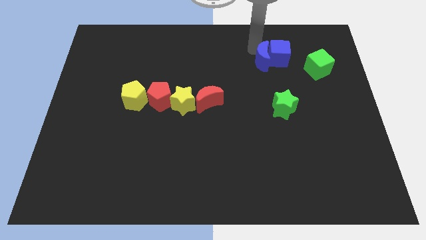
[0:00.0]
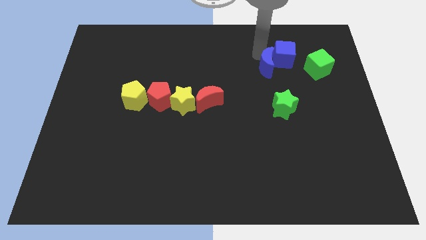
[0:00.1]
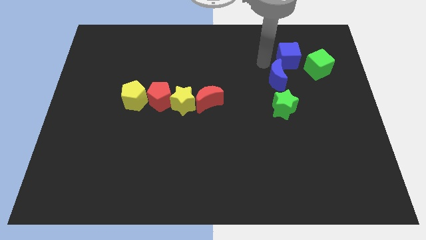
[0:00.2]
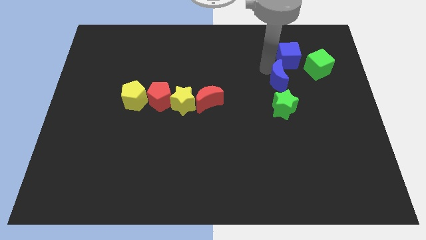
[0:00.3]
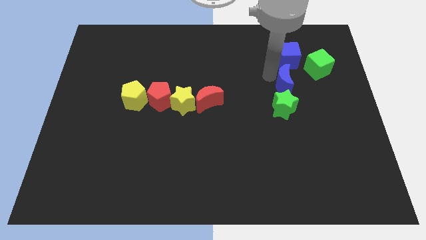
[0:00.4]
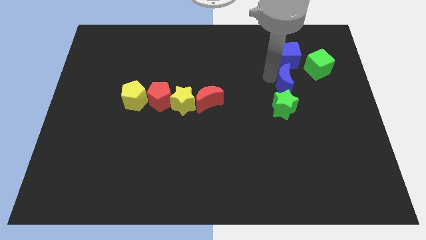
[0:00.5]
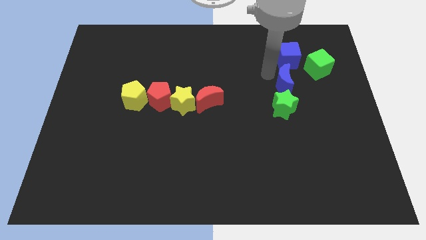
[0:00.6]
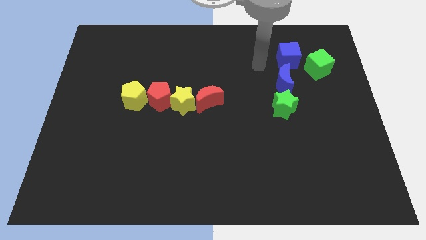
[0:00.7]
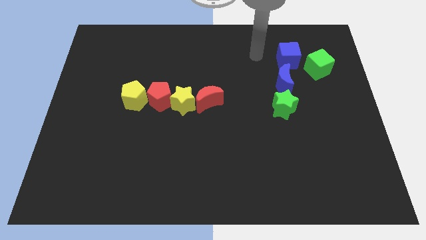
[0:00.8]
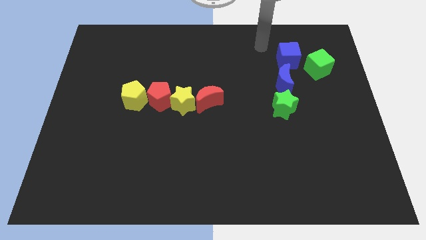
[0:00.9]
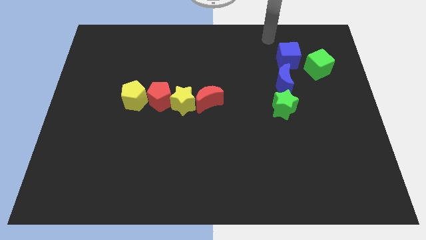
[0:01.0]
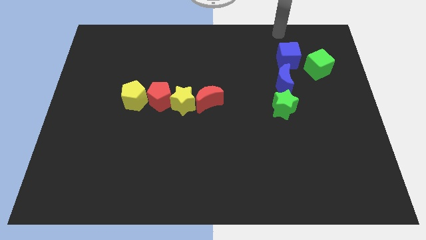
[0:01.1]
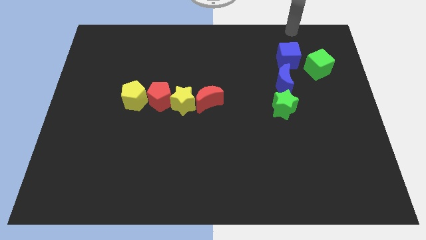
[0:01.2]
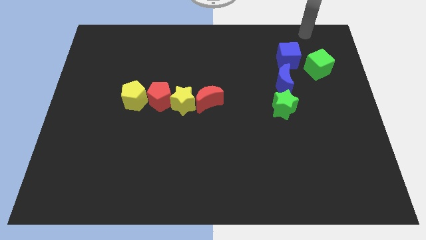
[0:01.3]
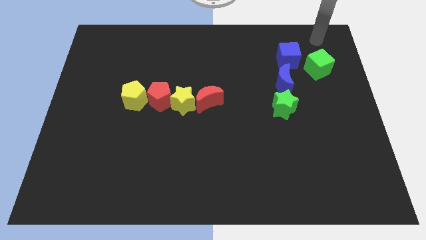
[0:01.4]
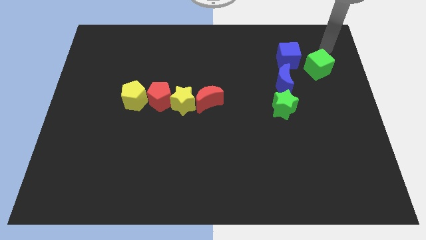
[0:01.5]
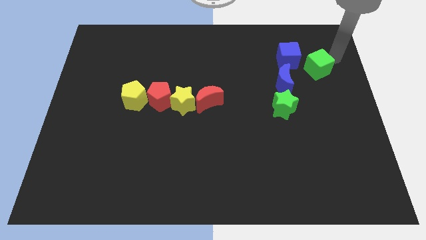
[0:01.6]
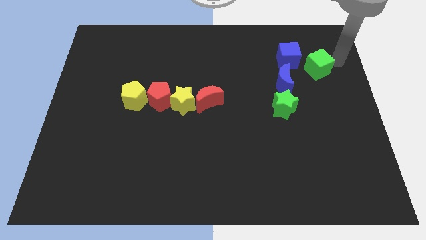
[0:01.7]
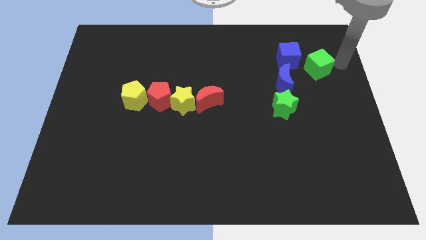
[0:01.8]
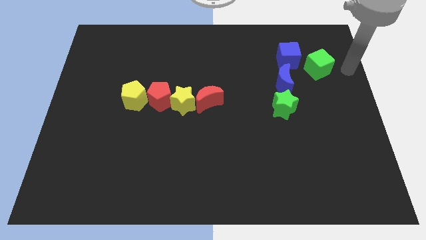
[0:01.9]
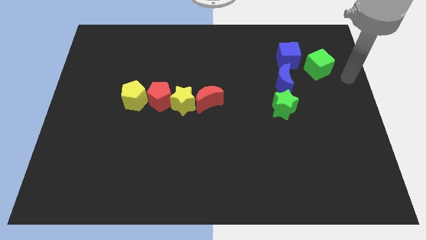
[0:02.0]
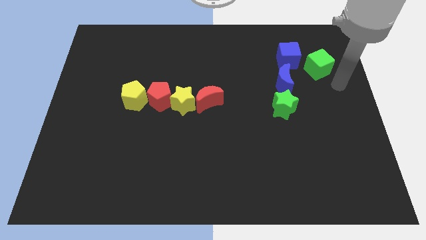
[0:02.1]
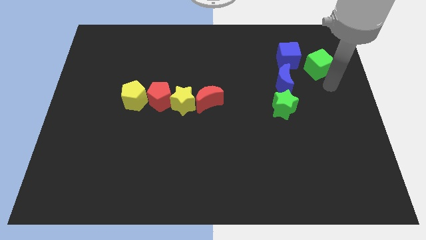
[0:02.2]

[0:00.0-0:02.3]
place the blue moon above the green star

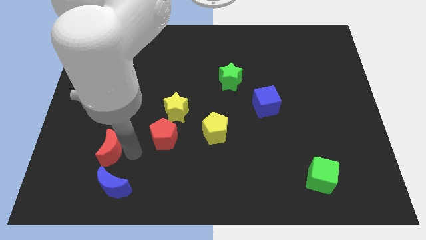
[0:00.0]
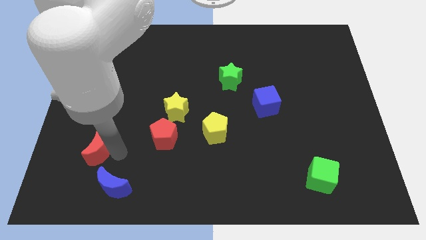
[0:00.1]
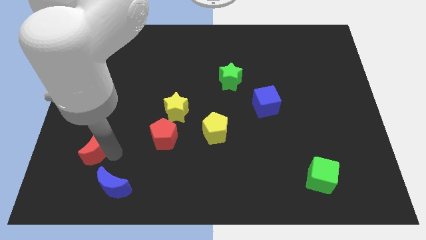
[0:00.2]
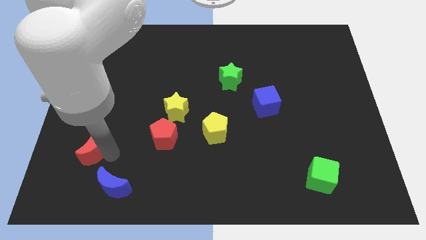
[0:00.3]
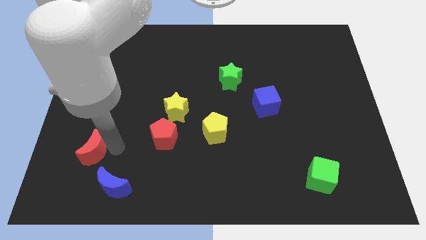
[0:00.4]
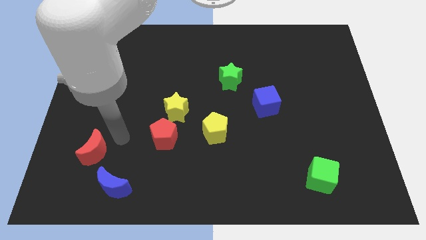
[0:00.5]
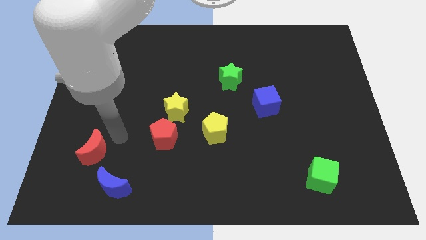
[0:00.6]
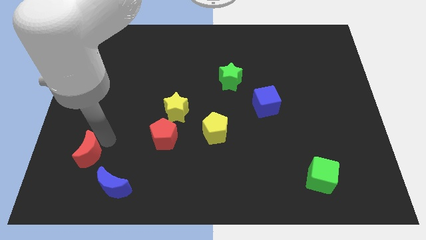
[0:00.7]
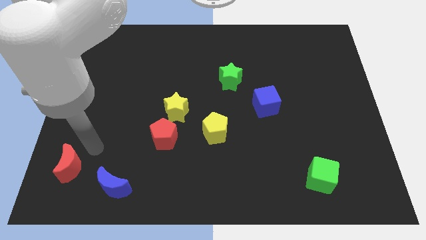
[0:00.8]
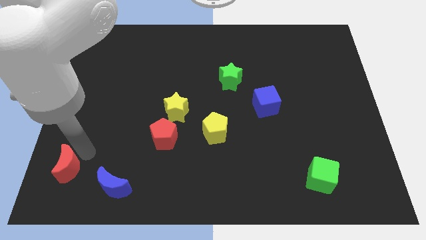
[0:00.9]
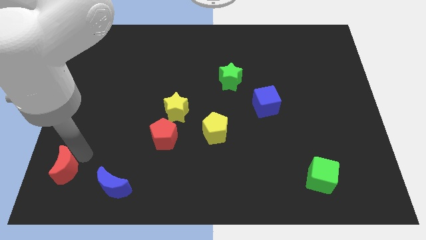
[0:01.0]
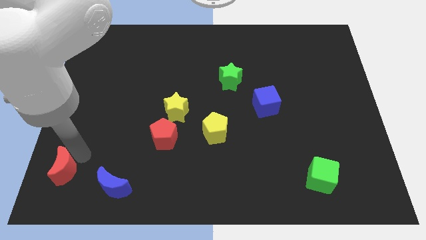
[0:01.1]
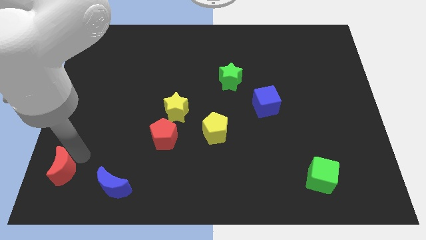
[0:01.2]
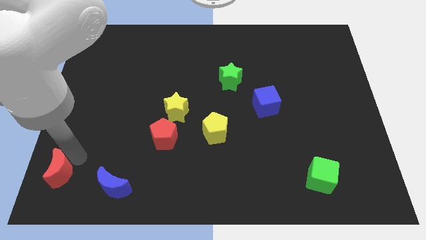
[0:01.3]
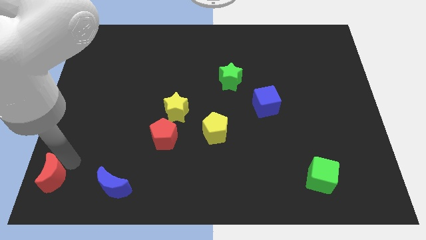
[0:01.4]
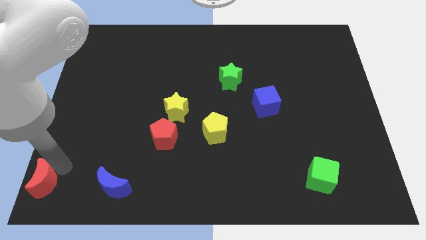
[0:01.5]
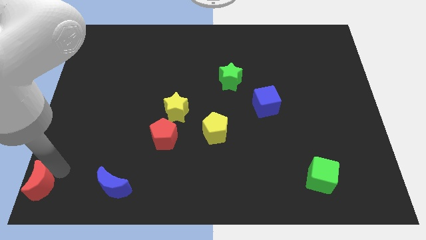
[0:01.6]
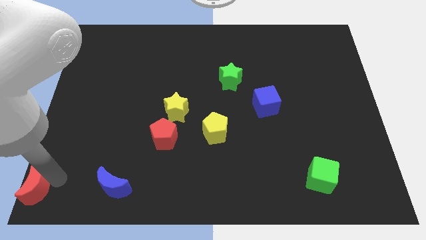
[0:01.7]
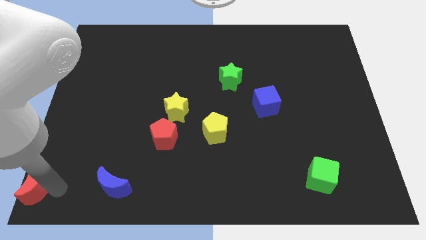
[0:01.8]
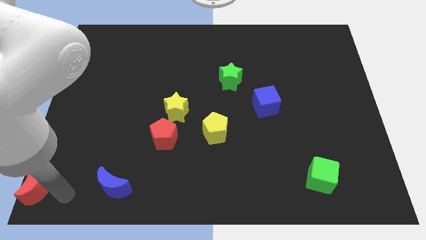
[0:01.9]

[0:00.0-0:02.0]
slide the red crescent to the bottom left side of the board

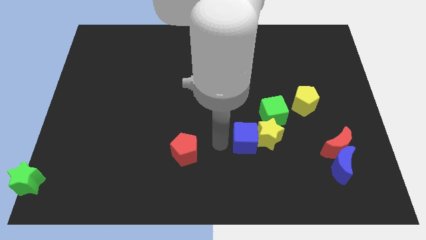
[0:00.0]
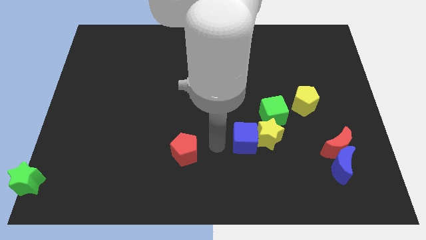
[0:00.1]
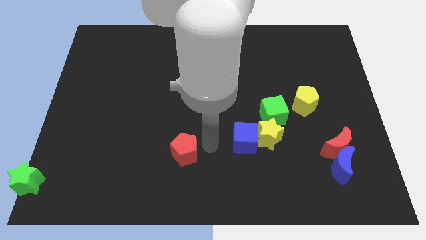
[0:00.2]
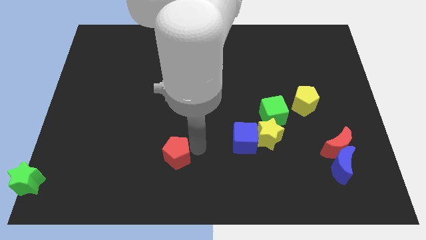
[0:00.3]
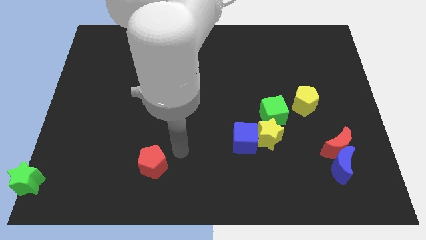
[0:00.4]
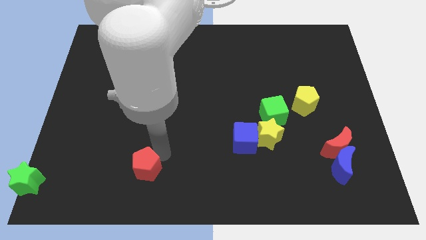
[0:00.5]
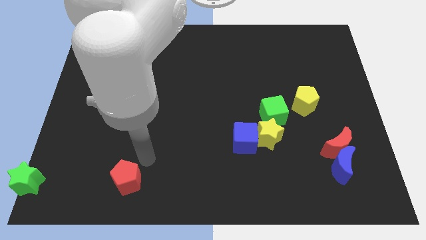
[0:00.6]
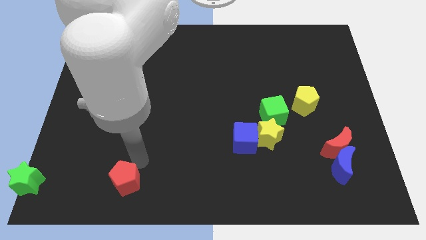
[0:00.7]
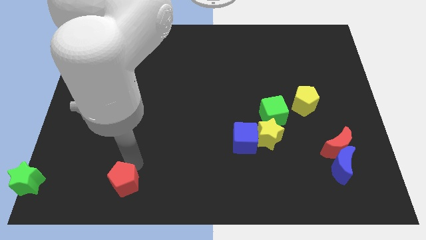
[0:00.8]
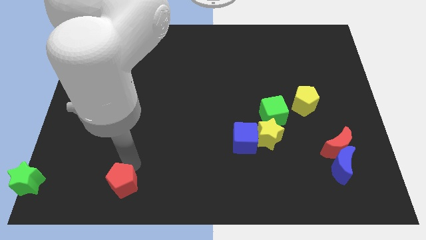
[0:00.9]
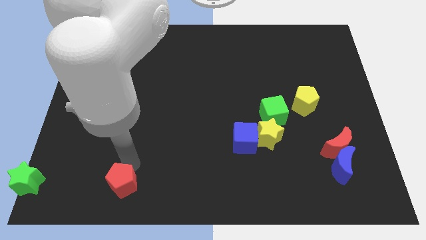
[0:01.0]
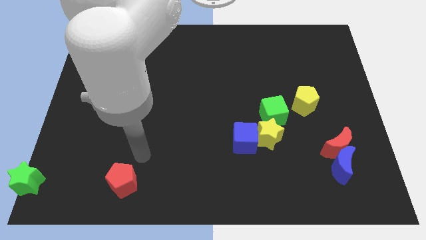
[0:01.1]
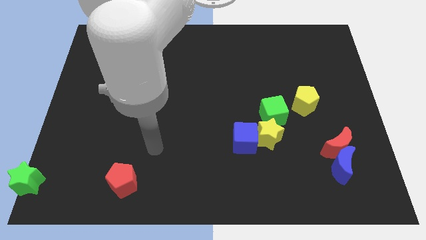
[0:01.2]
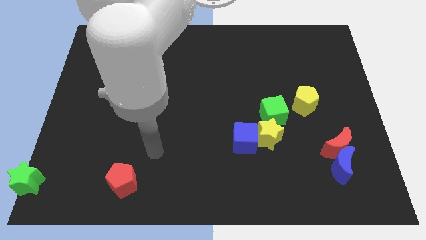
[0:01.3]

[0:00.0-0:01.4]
move the red pentagon towards the bottom side of the board

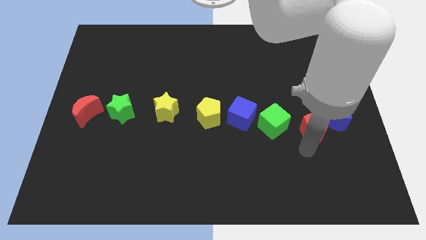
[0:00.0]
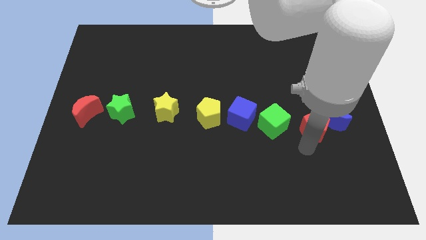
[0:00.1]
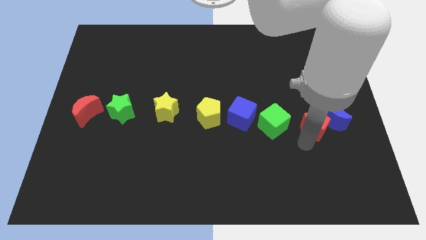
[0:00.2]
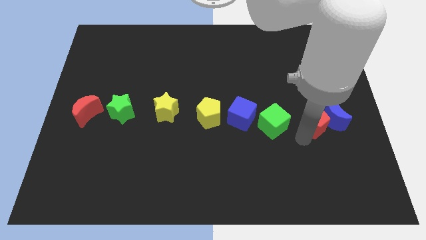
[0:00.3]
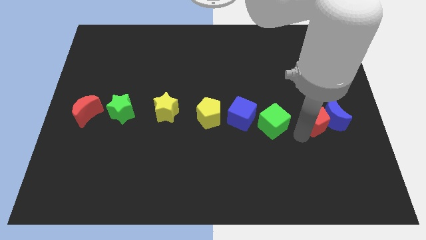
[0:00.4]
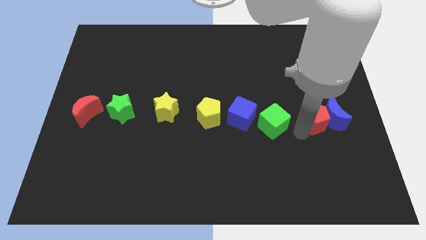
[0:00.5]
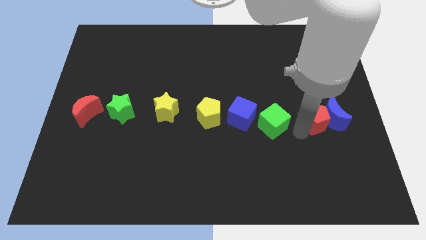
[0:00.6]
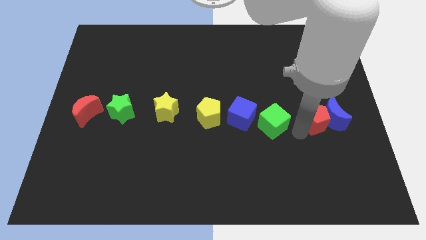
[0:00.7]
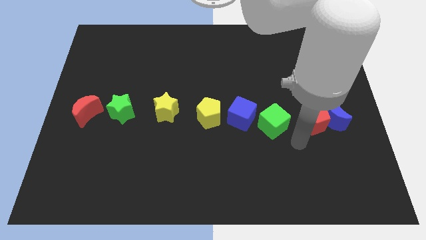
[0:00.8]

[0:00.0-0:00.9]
move the red pentagon into the blue crescent

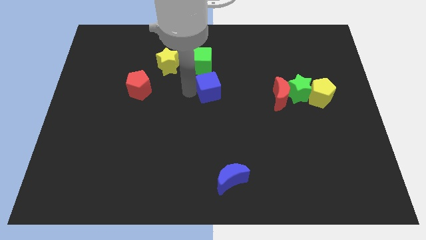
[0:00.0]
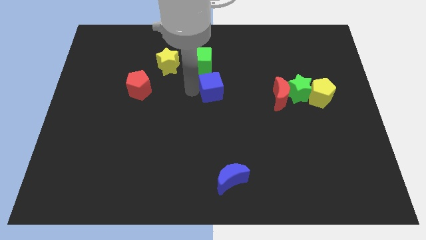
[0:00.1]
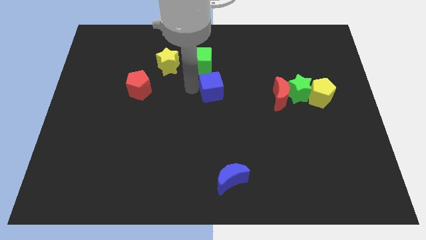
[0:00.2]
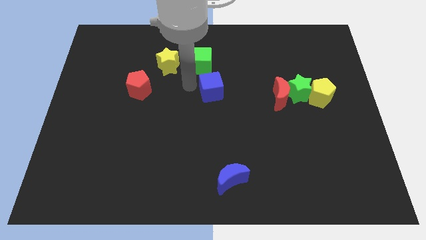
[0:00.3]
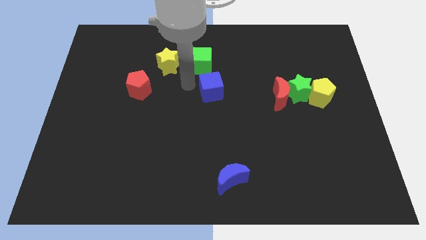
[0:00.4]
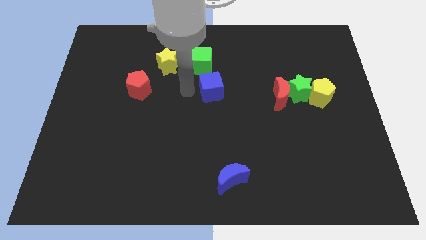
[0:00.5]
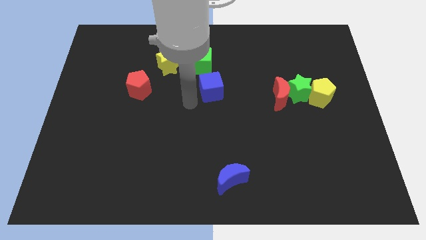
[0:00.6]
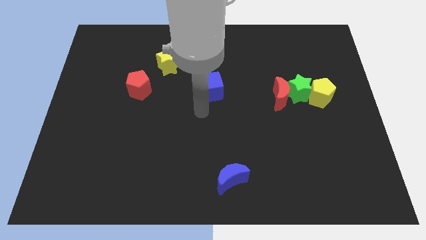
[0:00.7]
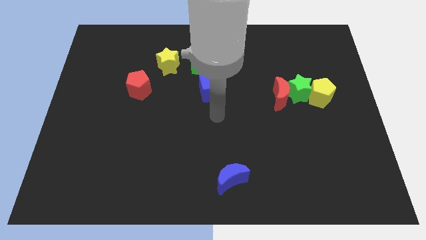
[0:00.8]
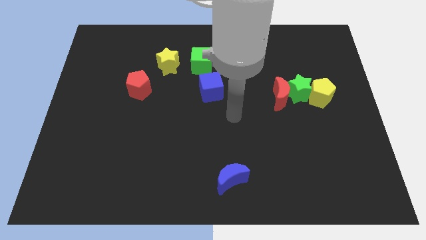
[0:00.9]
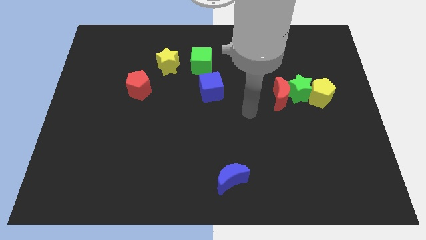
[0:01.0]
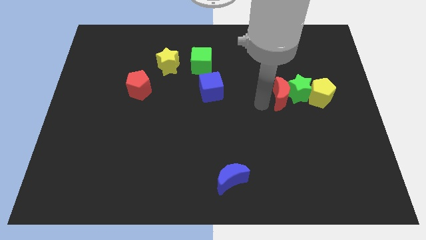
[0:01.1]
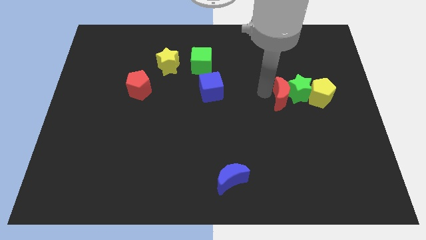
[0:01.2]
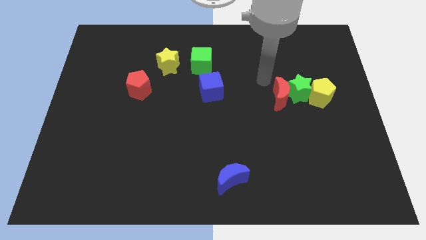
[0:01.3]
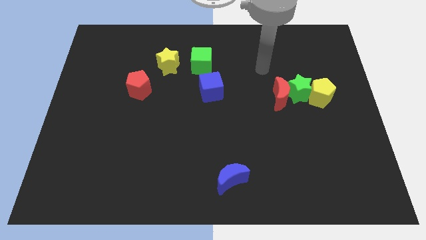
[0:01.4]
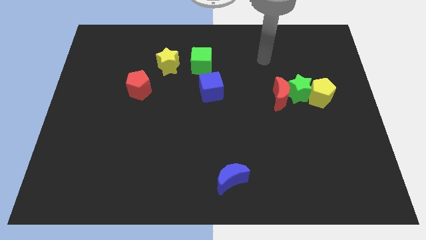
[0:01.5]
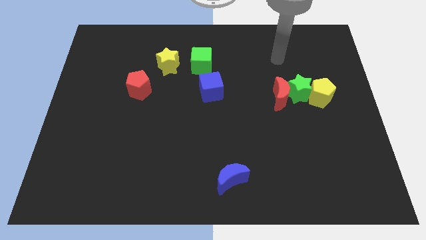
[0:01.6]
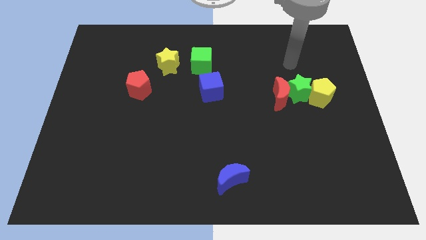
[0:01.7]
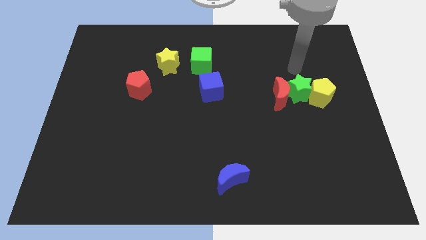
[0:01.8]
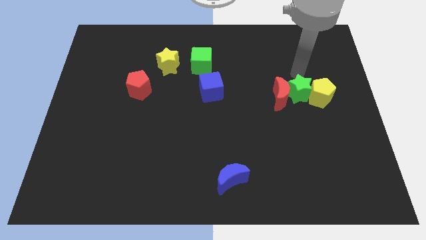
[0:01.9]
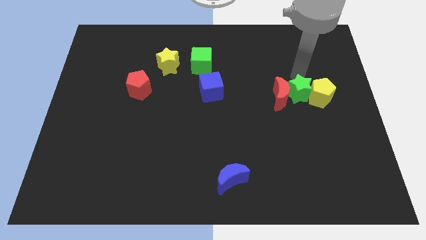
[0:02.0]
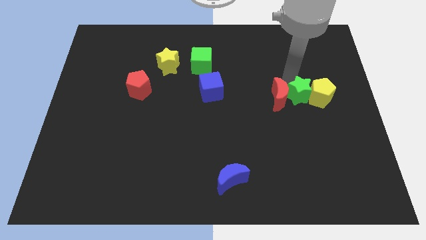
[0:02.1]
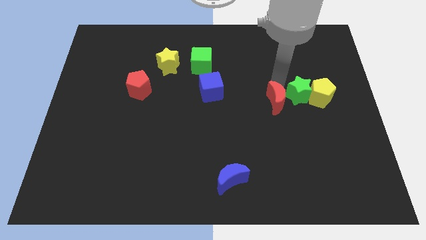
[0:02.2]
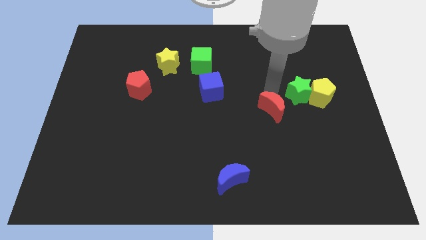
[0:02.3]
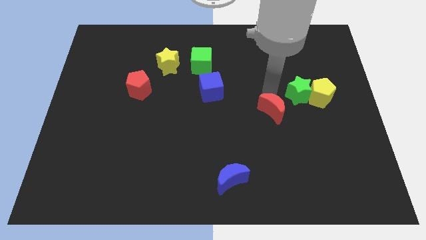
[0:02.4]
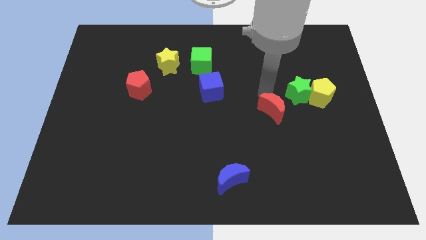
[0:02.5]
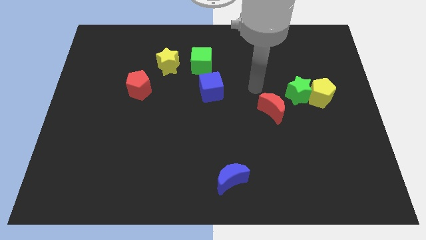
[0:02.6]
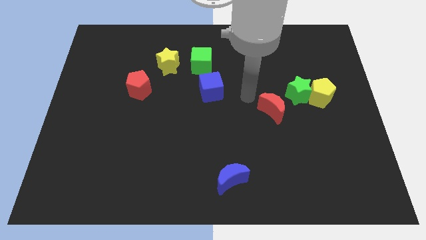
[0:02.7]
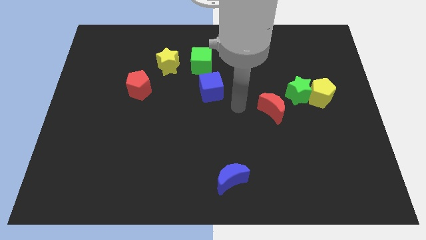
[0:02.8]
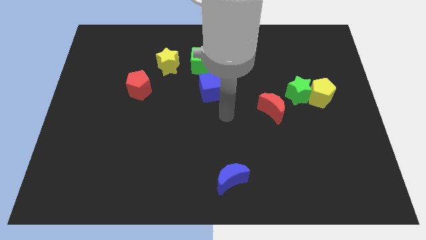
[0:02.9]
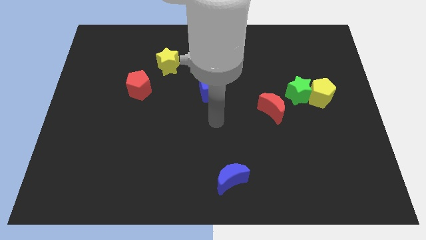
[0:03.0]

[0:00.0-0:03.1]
go and separate the red crescent from the green star
